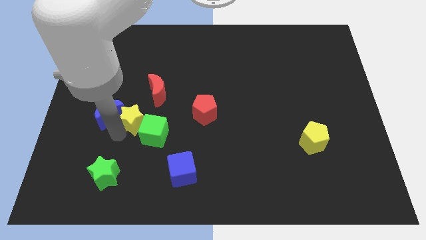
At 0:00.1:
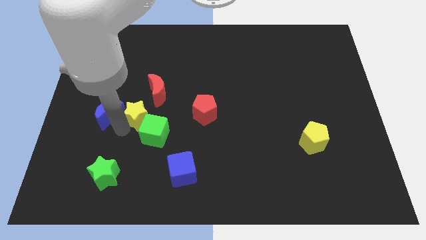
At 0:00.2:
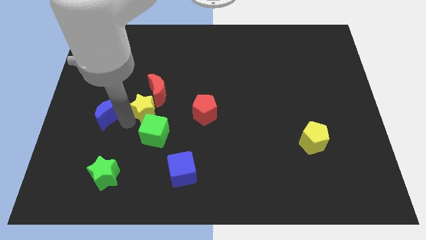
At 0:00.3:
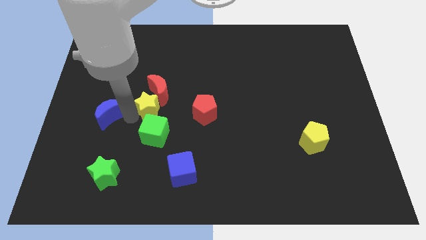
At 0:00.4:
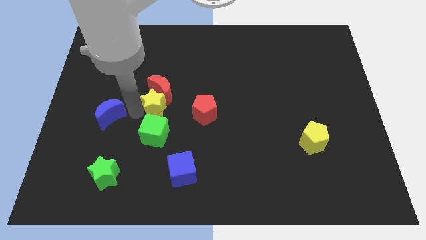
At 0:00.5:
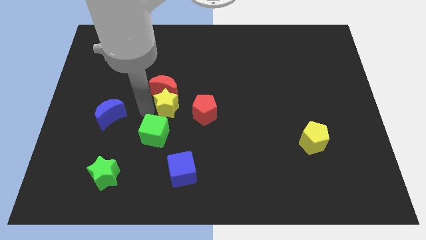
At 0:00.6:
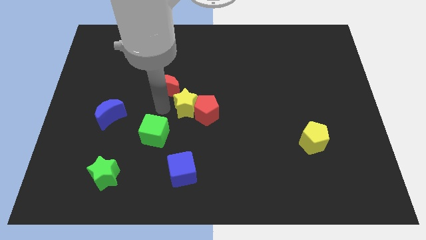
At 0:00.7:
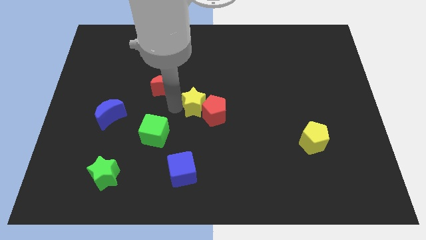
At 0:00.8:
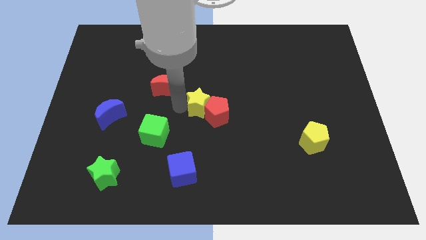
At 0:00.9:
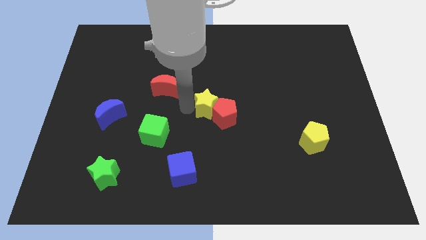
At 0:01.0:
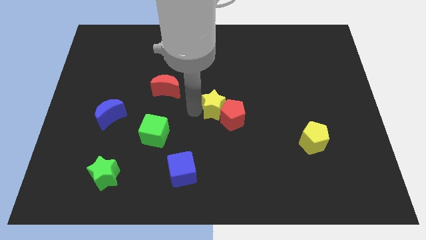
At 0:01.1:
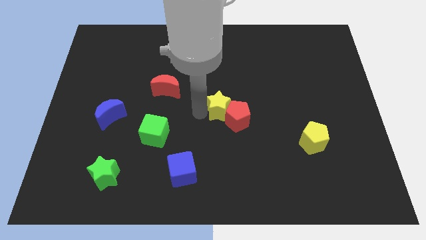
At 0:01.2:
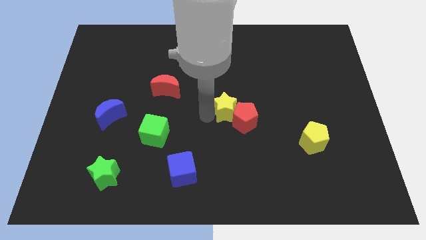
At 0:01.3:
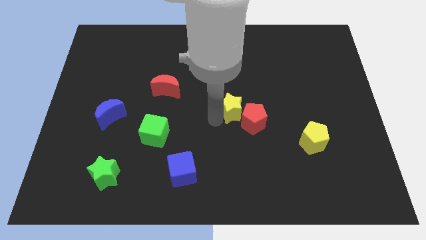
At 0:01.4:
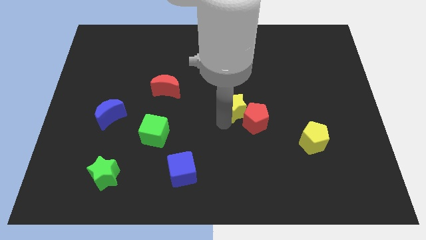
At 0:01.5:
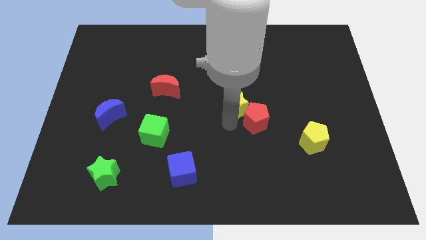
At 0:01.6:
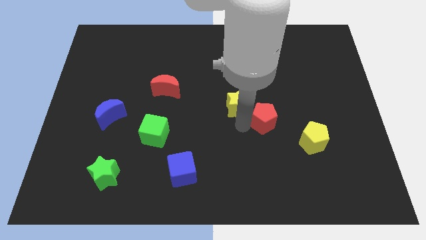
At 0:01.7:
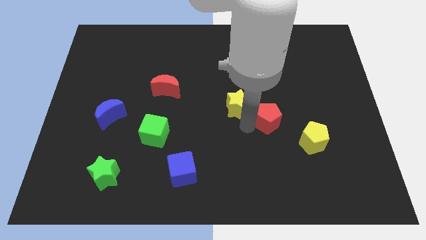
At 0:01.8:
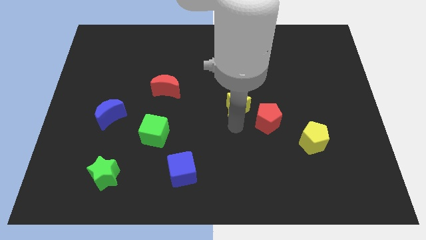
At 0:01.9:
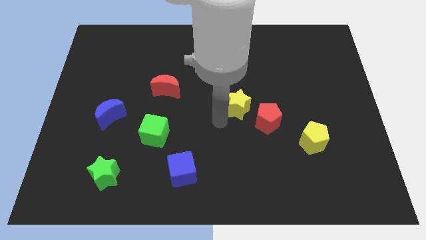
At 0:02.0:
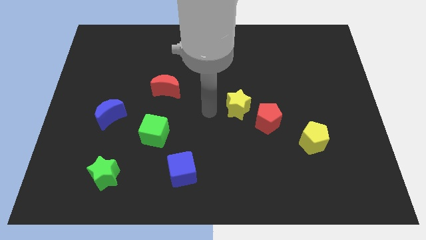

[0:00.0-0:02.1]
push the yellow star and red pentagon together to right

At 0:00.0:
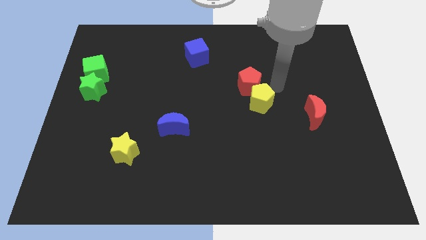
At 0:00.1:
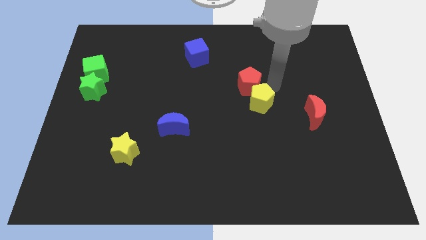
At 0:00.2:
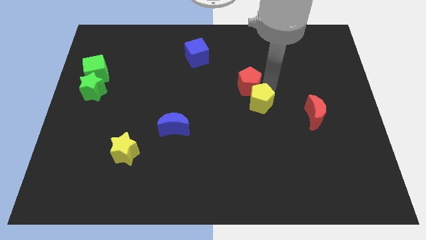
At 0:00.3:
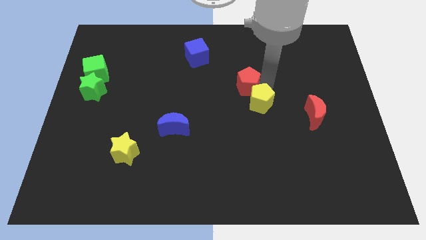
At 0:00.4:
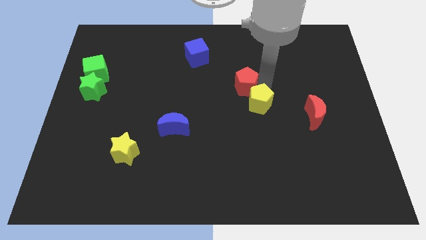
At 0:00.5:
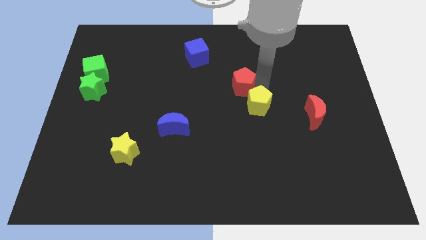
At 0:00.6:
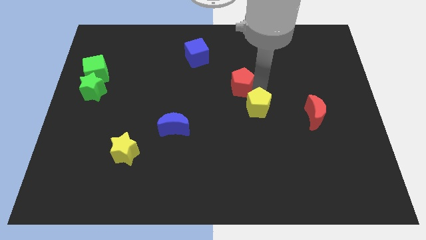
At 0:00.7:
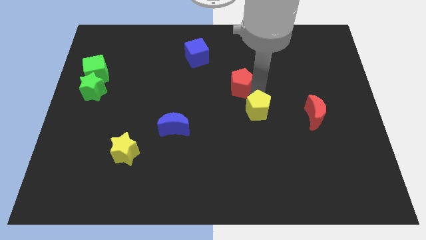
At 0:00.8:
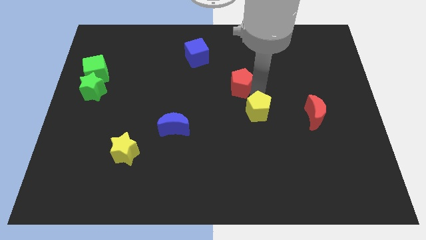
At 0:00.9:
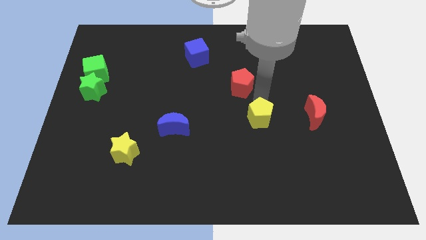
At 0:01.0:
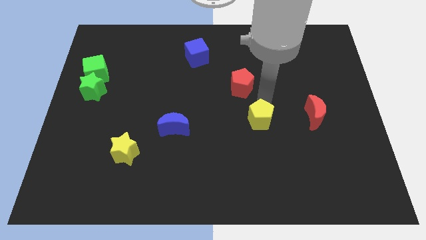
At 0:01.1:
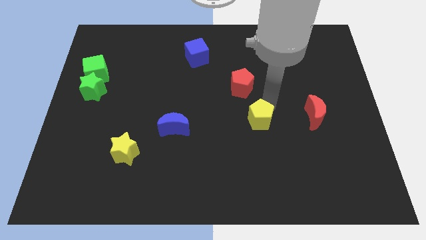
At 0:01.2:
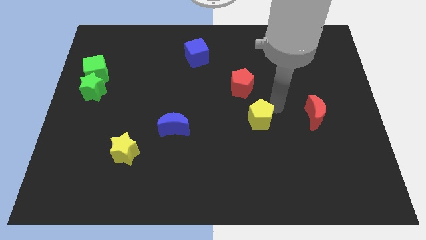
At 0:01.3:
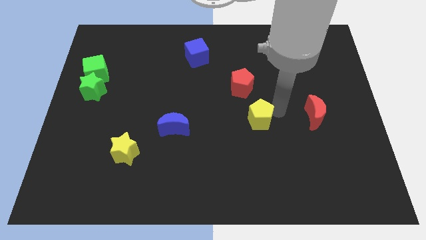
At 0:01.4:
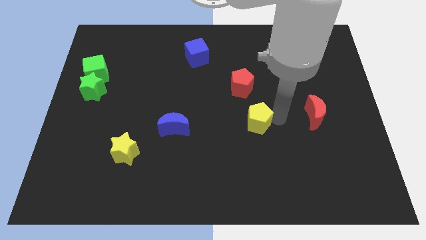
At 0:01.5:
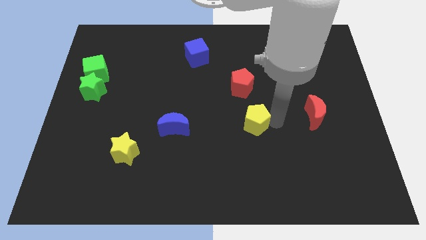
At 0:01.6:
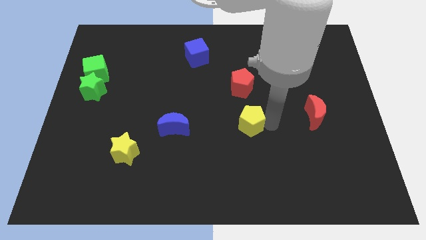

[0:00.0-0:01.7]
separate the yellow pentagon from the red pentagon

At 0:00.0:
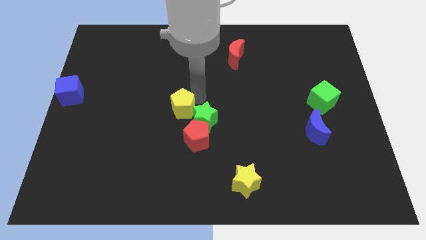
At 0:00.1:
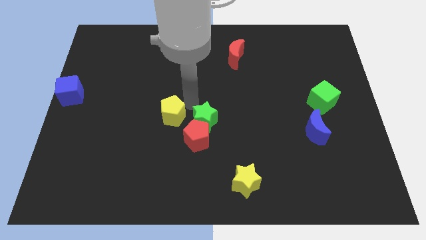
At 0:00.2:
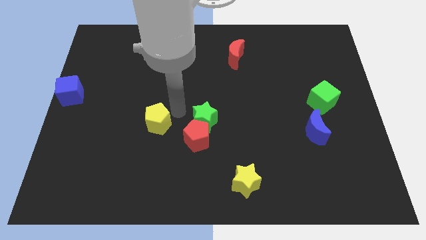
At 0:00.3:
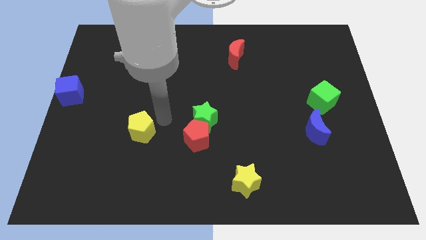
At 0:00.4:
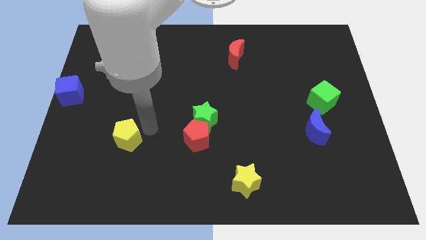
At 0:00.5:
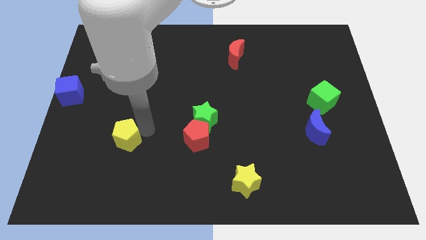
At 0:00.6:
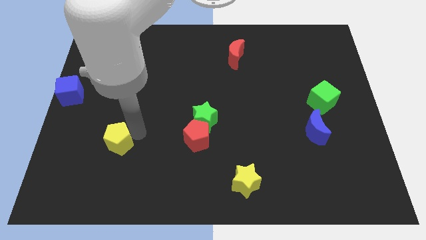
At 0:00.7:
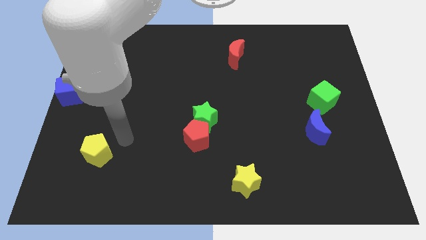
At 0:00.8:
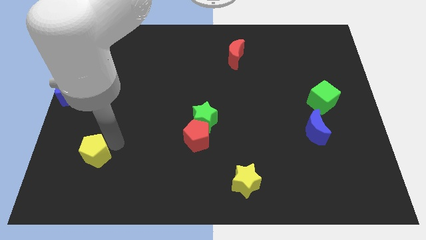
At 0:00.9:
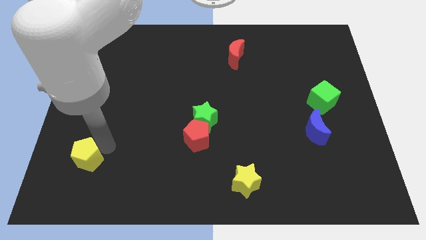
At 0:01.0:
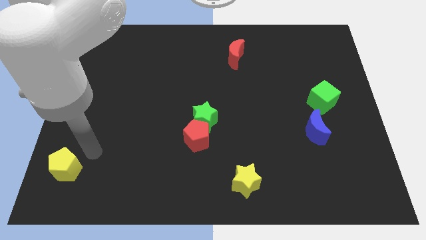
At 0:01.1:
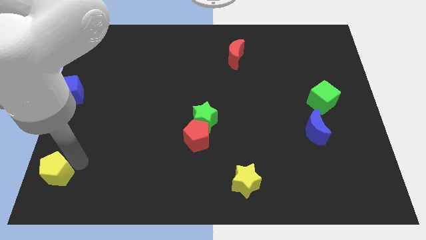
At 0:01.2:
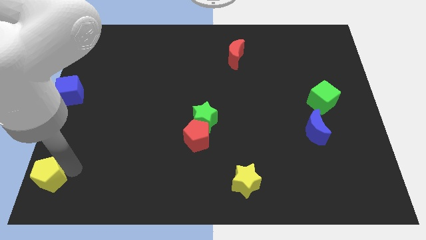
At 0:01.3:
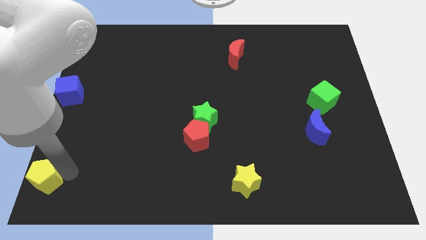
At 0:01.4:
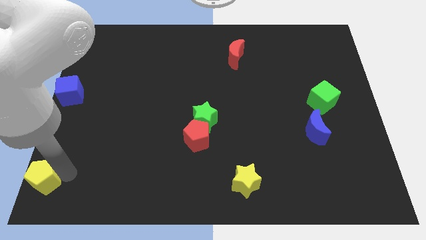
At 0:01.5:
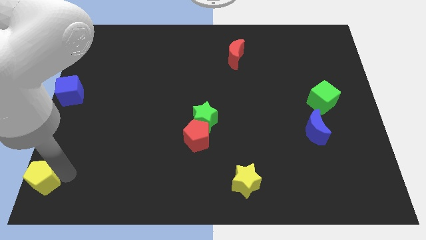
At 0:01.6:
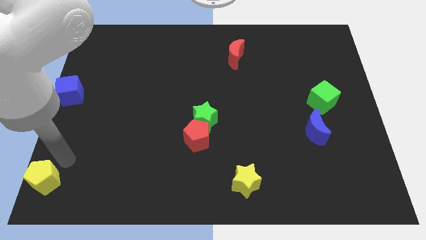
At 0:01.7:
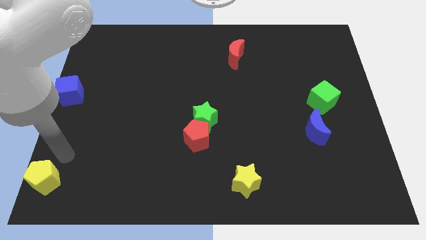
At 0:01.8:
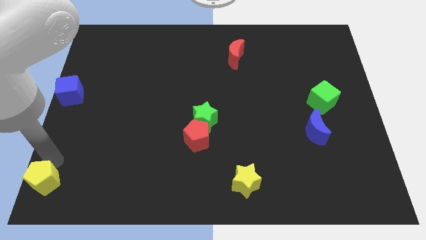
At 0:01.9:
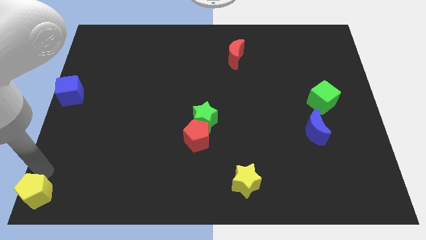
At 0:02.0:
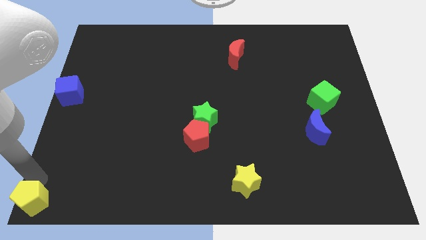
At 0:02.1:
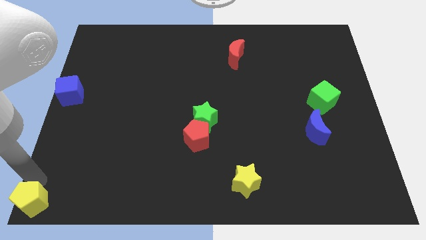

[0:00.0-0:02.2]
push the yellow pentagon towards the bottom left corner of the board

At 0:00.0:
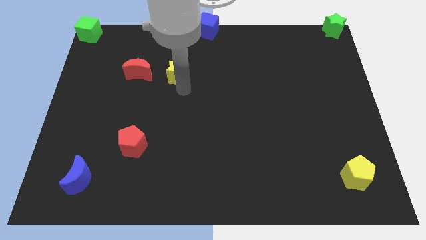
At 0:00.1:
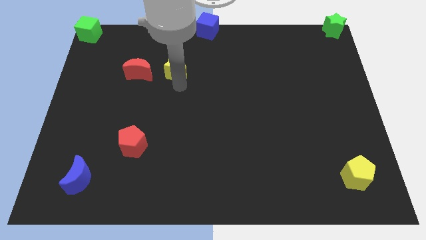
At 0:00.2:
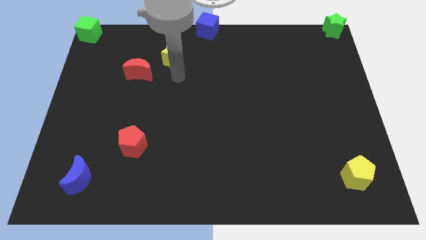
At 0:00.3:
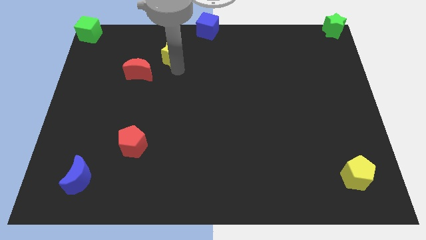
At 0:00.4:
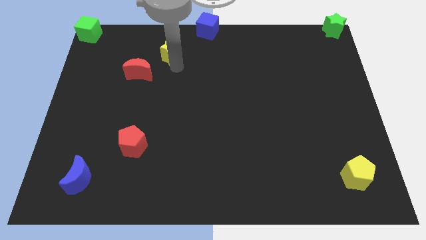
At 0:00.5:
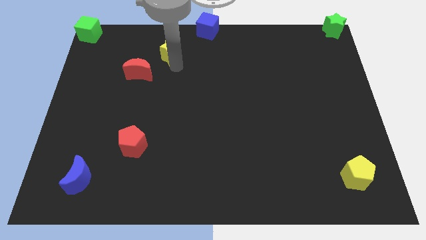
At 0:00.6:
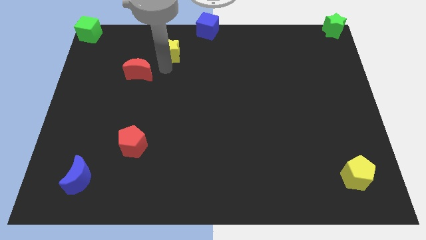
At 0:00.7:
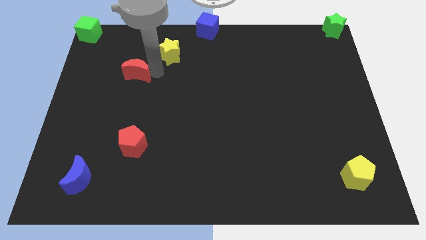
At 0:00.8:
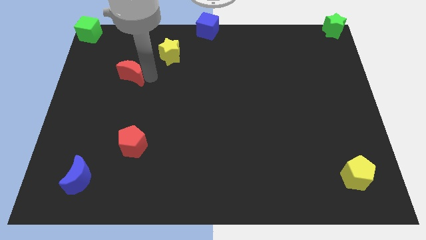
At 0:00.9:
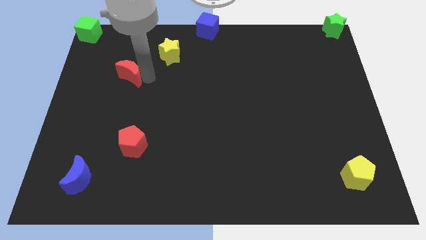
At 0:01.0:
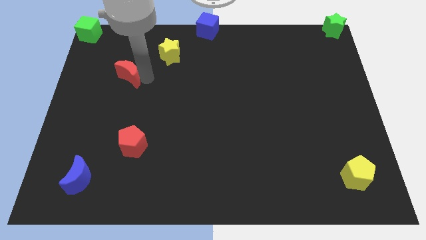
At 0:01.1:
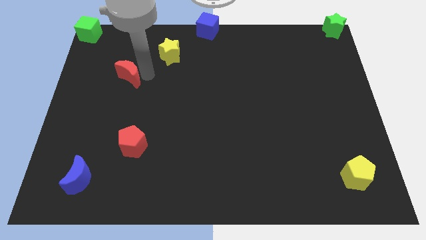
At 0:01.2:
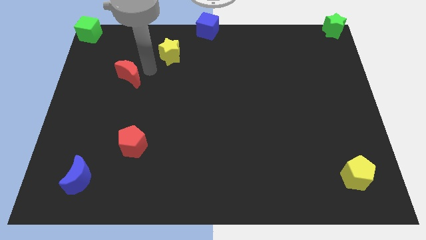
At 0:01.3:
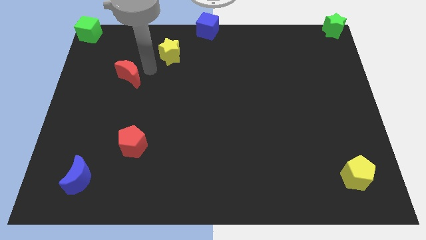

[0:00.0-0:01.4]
push the yellow star towards the top center of the board

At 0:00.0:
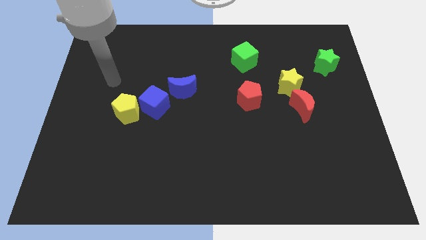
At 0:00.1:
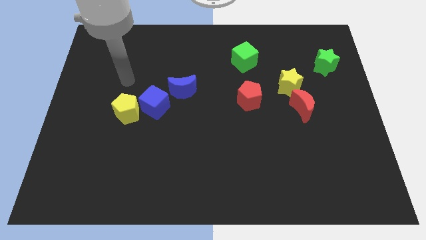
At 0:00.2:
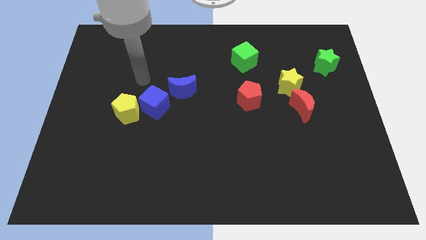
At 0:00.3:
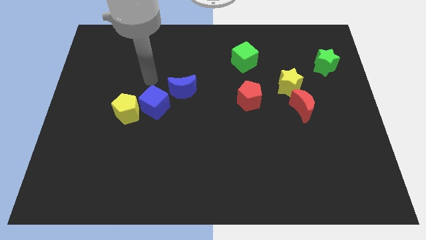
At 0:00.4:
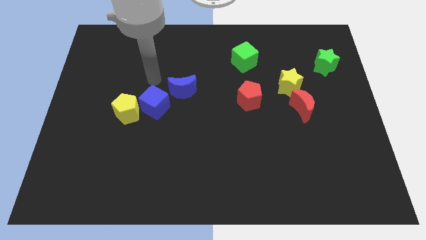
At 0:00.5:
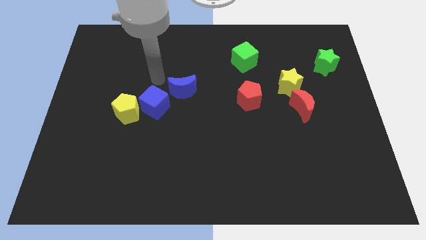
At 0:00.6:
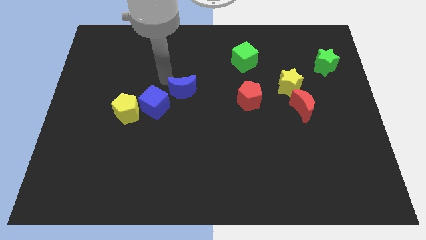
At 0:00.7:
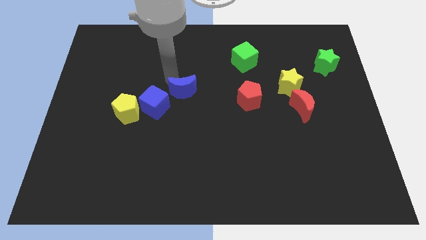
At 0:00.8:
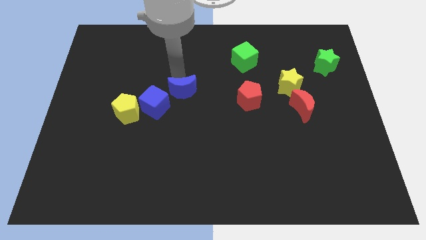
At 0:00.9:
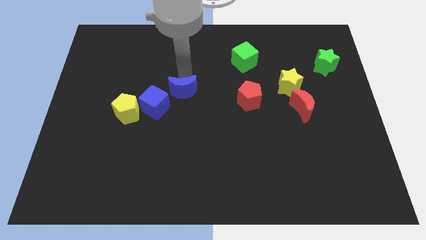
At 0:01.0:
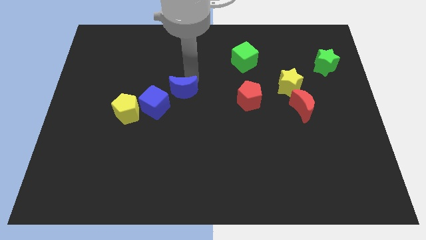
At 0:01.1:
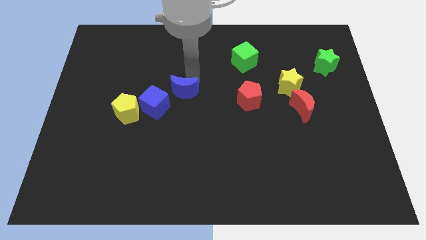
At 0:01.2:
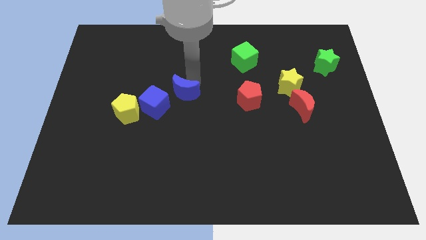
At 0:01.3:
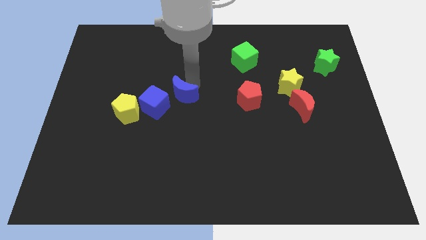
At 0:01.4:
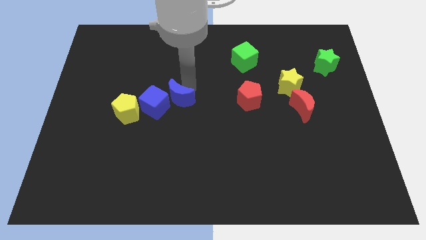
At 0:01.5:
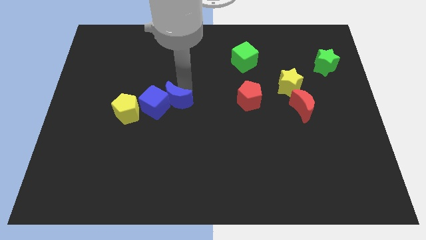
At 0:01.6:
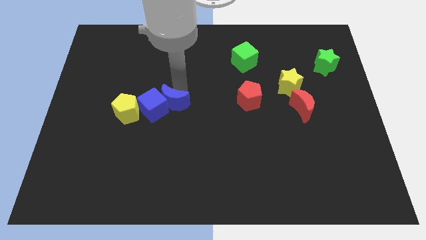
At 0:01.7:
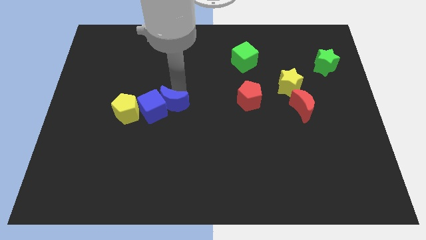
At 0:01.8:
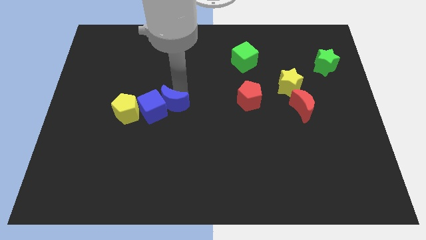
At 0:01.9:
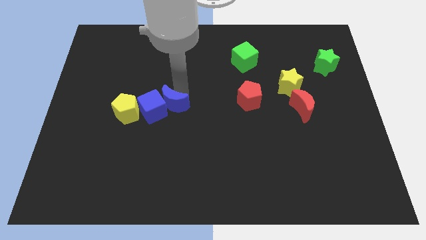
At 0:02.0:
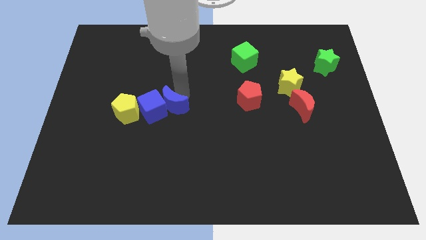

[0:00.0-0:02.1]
push the blue moon into the blue cube
